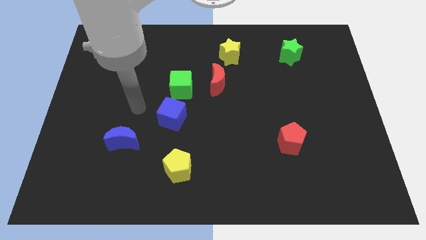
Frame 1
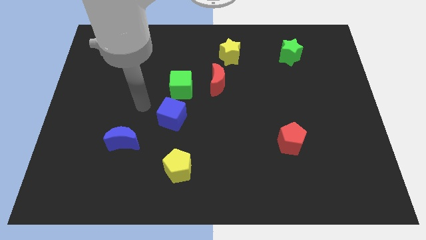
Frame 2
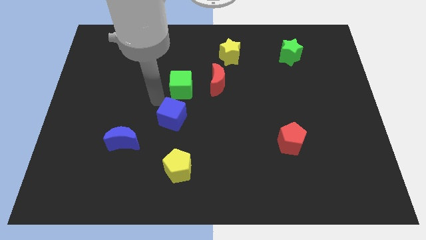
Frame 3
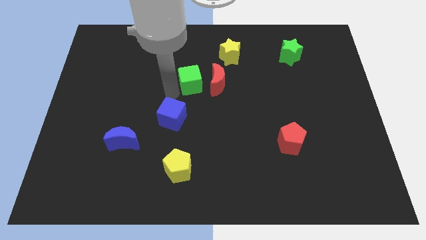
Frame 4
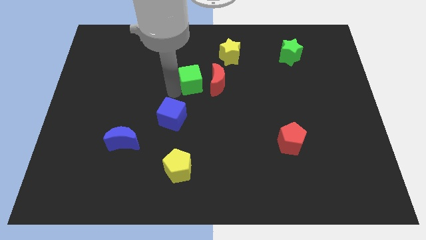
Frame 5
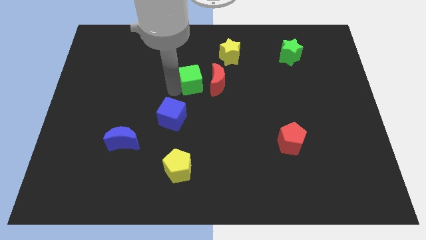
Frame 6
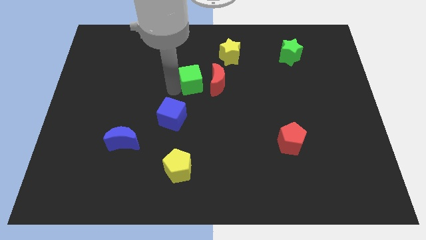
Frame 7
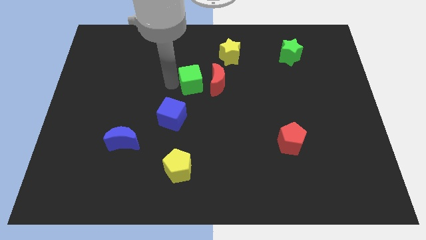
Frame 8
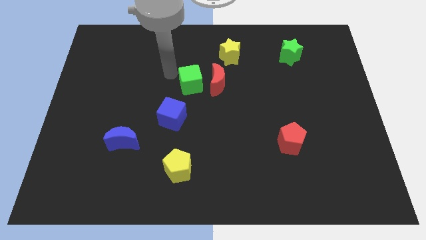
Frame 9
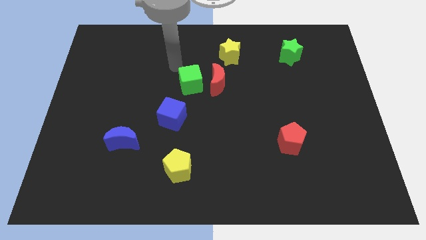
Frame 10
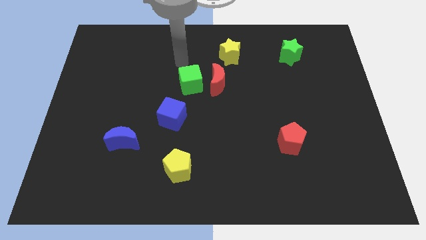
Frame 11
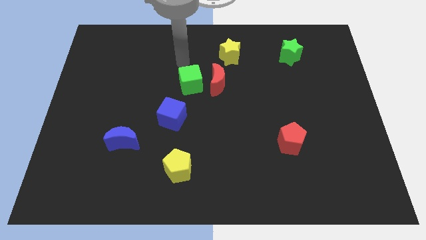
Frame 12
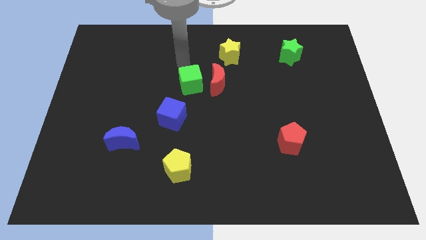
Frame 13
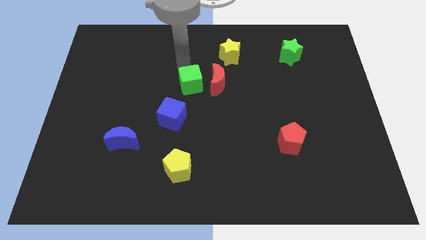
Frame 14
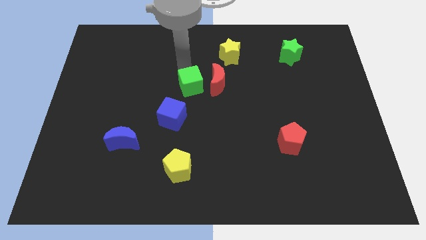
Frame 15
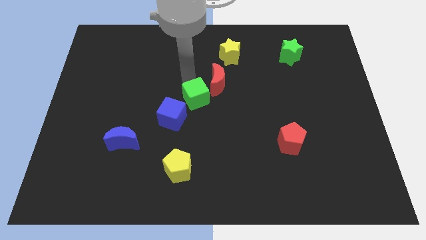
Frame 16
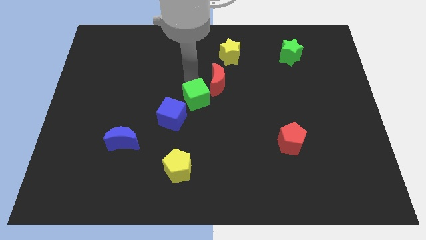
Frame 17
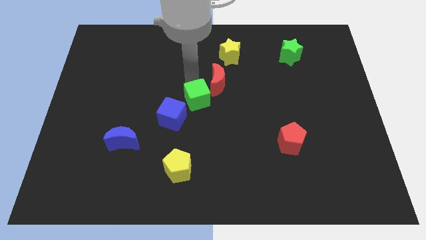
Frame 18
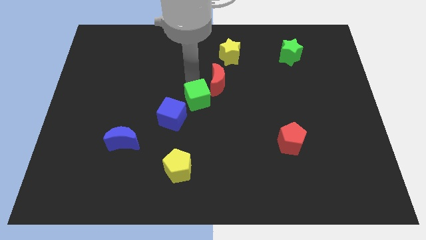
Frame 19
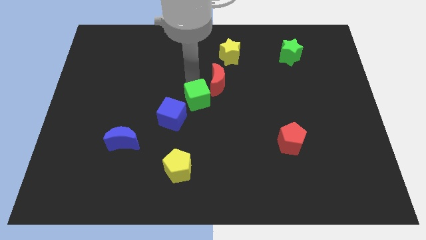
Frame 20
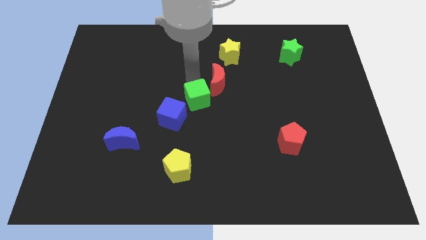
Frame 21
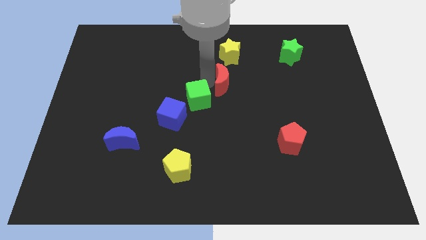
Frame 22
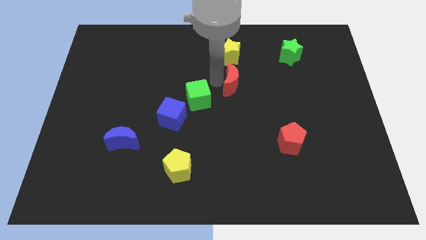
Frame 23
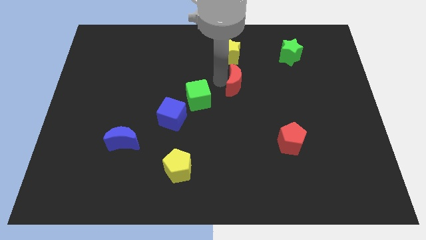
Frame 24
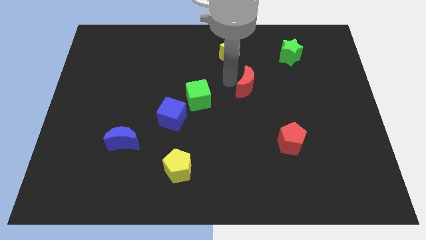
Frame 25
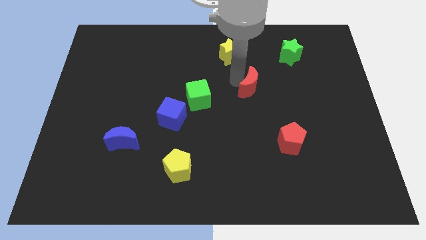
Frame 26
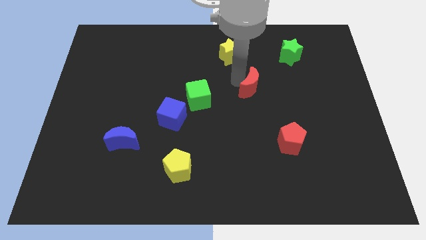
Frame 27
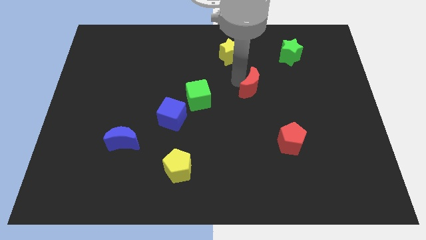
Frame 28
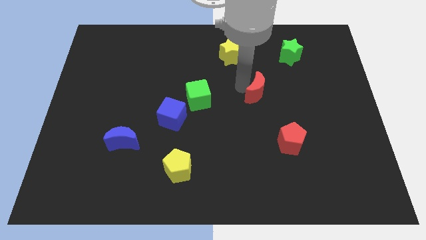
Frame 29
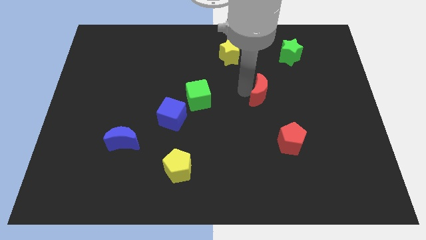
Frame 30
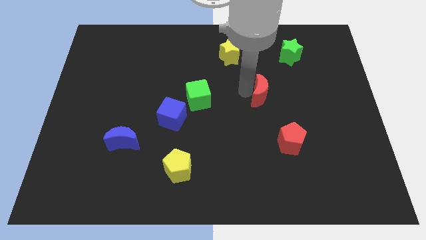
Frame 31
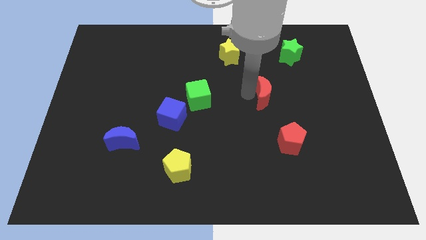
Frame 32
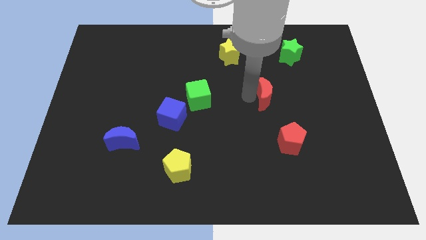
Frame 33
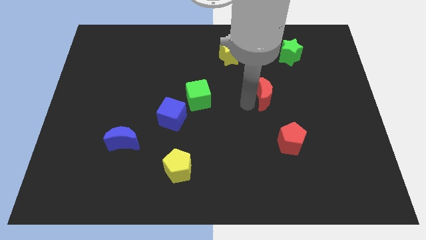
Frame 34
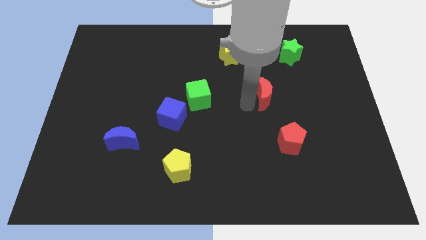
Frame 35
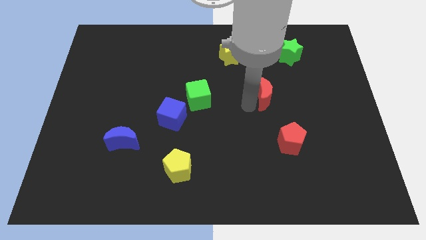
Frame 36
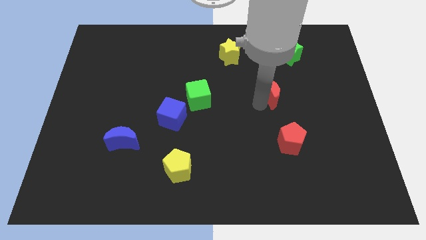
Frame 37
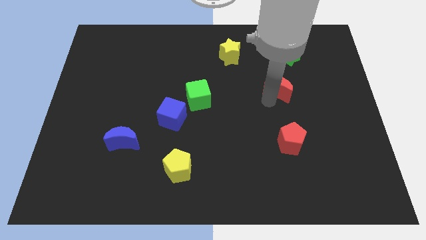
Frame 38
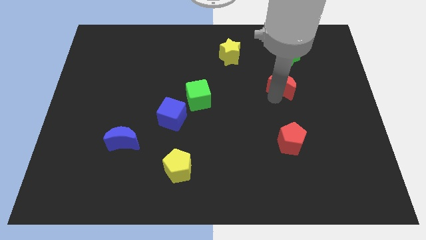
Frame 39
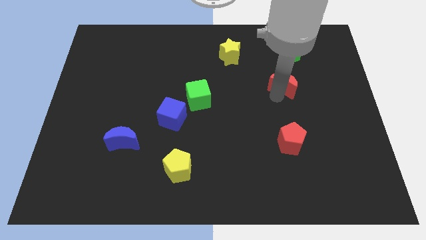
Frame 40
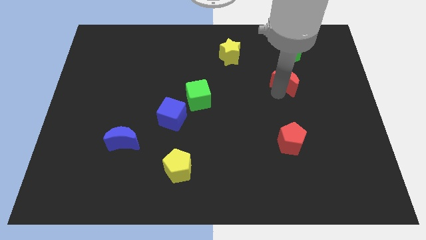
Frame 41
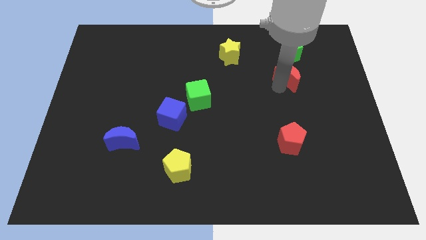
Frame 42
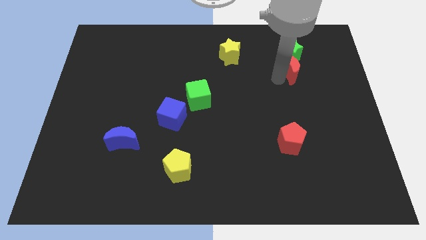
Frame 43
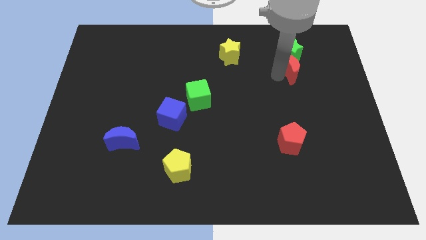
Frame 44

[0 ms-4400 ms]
move the red moon to the right side of the board

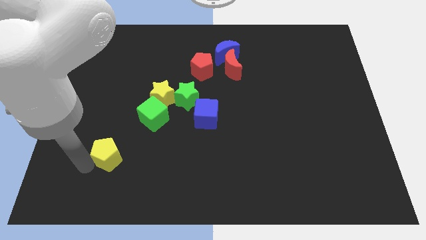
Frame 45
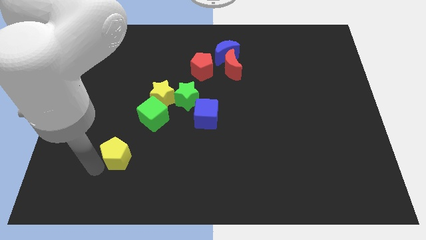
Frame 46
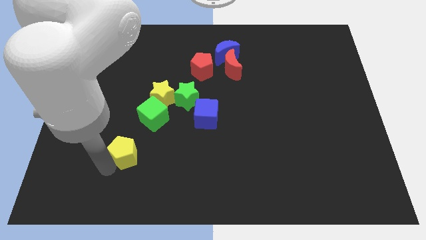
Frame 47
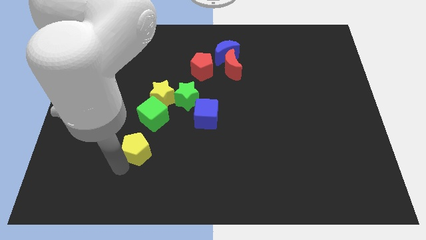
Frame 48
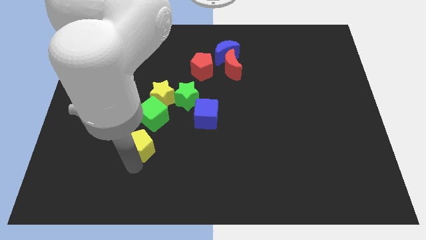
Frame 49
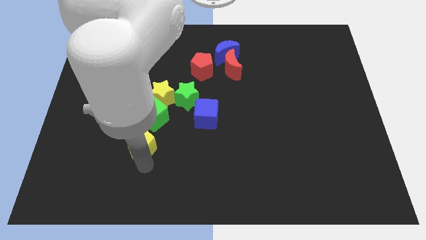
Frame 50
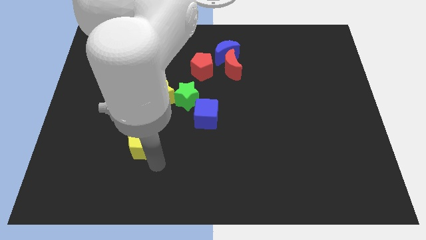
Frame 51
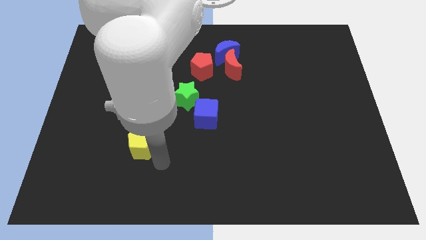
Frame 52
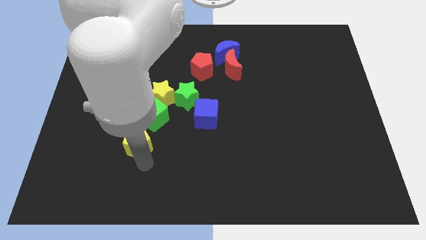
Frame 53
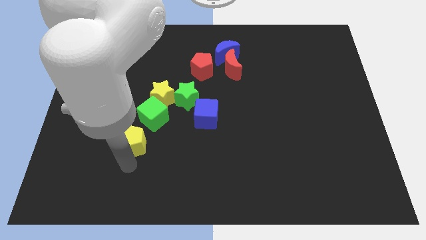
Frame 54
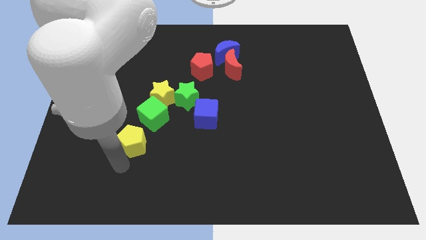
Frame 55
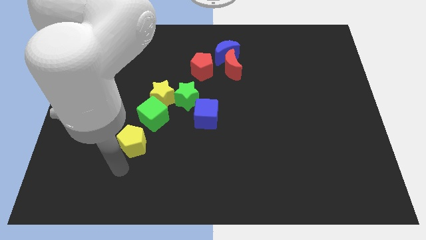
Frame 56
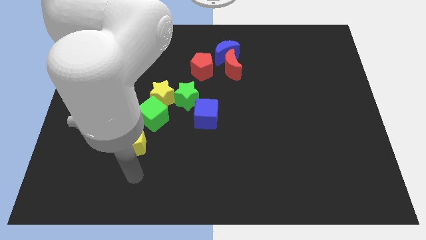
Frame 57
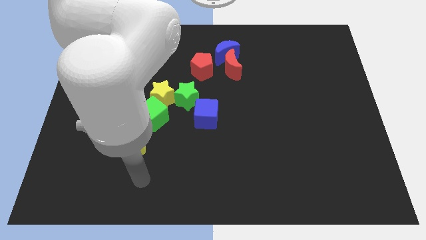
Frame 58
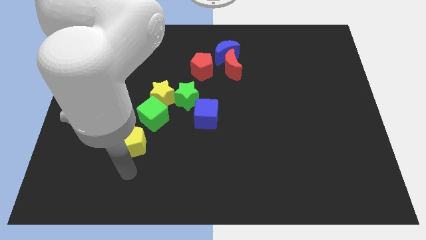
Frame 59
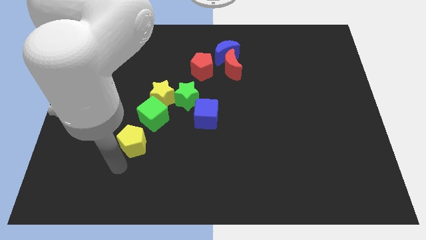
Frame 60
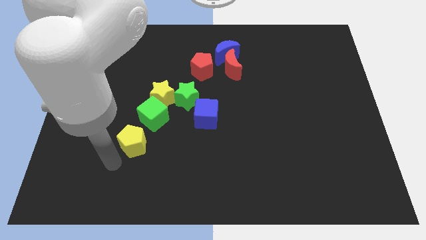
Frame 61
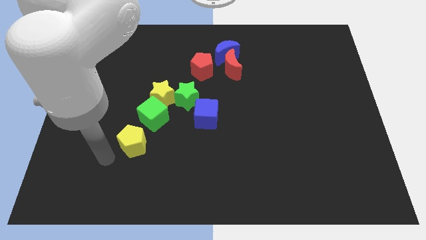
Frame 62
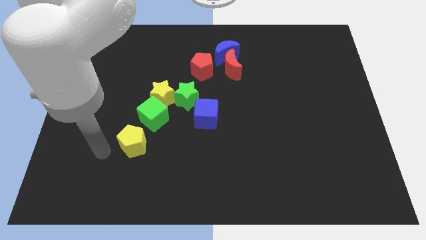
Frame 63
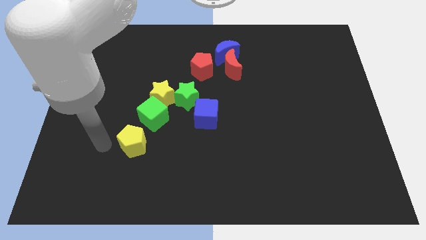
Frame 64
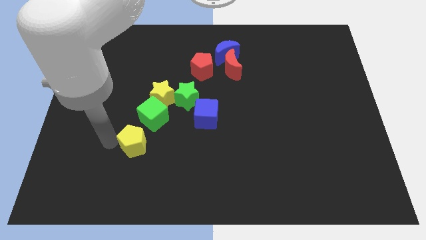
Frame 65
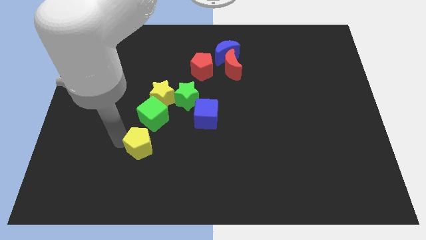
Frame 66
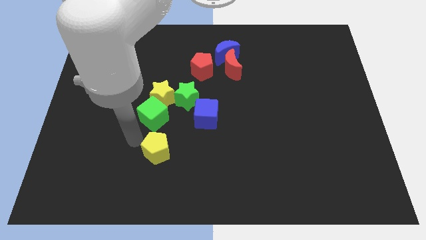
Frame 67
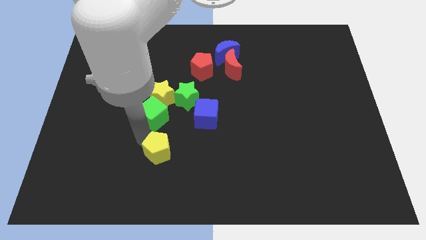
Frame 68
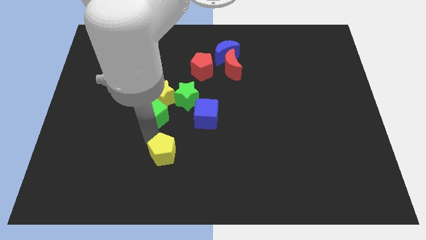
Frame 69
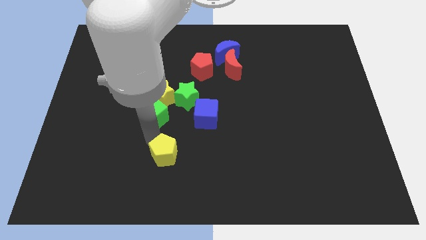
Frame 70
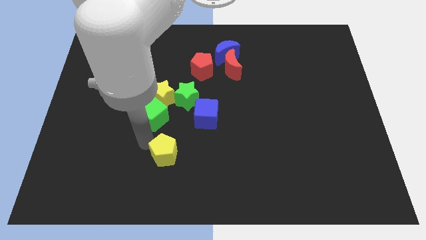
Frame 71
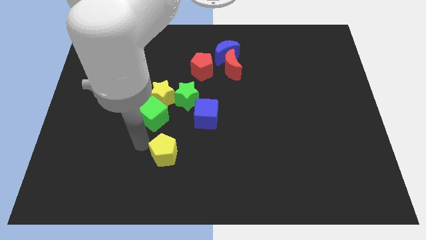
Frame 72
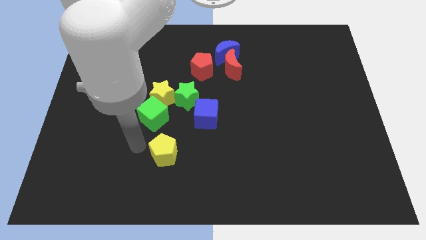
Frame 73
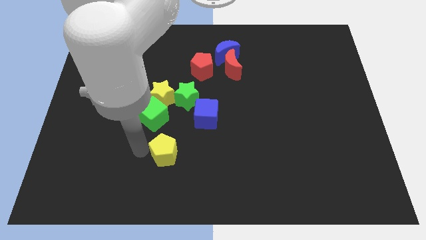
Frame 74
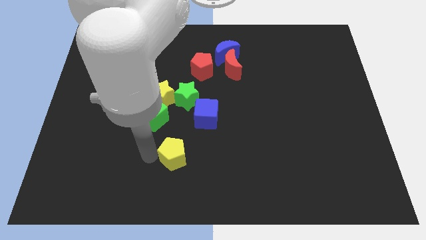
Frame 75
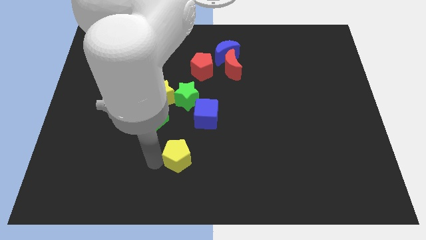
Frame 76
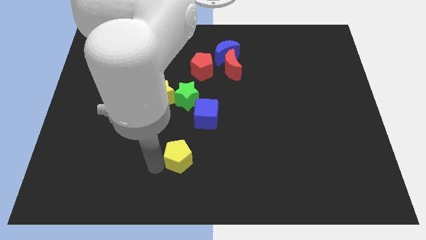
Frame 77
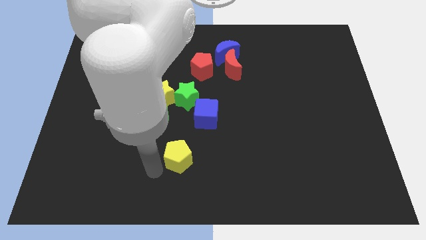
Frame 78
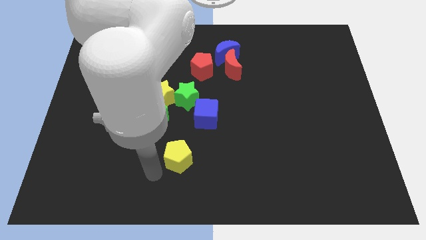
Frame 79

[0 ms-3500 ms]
place the yellow pentagon vertically below the green star

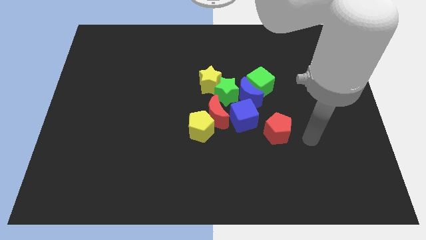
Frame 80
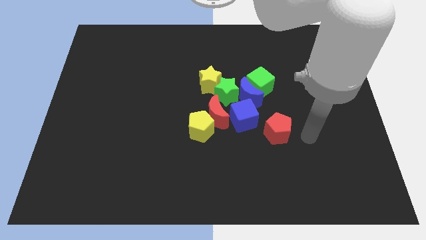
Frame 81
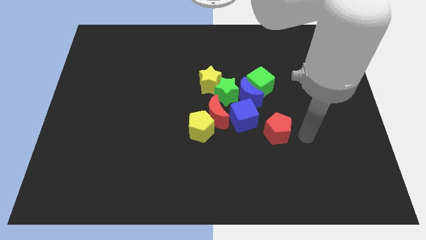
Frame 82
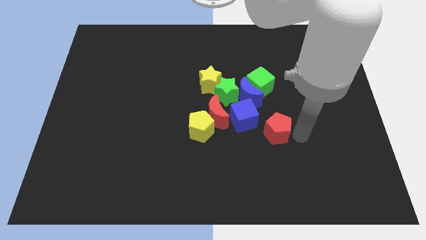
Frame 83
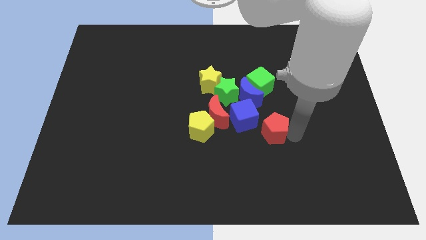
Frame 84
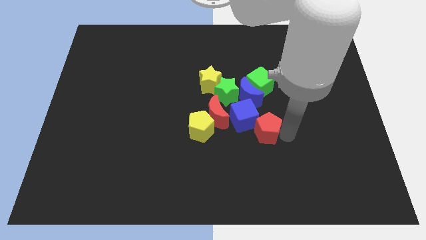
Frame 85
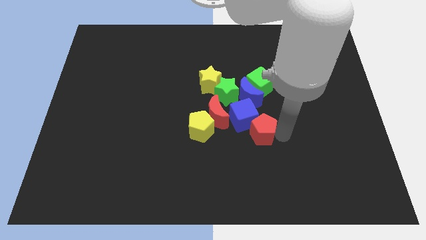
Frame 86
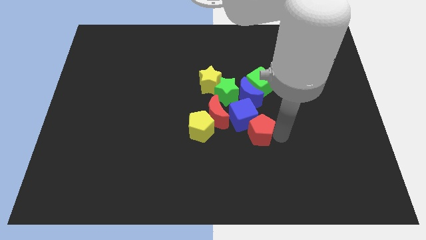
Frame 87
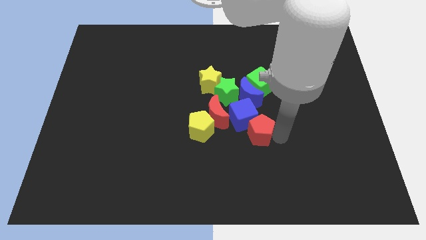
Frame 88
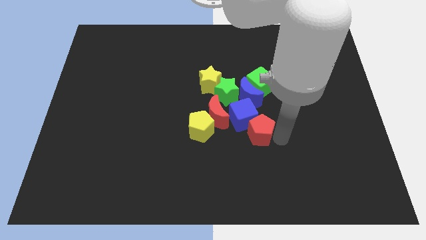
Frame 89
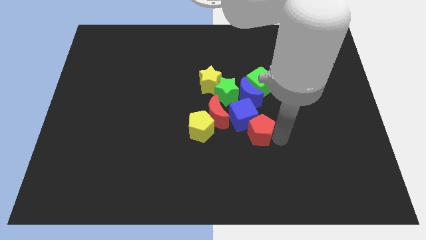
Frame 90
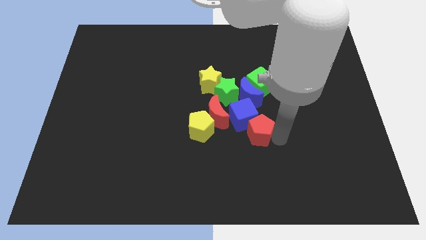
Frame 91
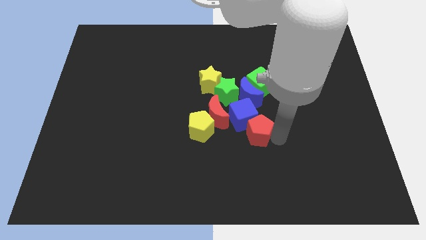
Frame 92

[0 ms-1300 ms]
move the red pentagon into the bottom side of the blue cube
